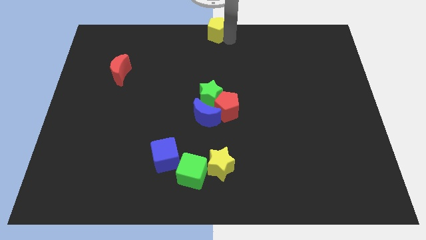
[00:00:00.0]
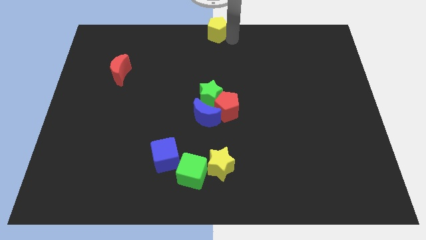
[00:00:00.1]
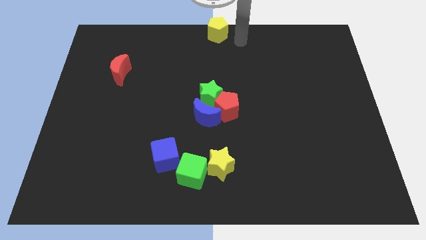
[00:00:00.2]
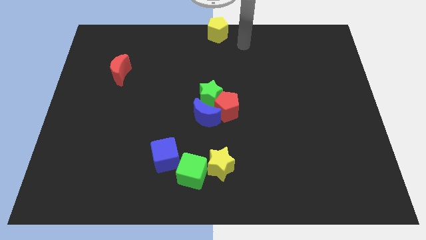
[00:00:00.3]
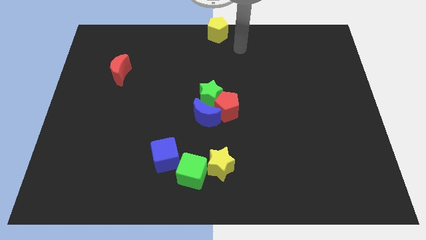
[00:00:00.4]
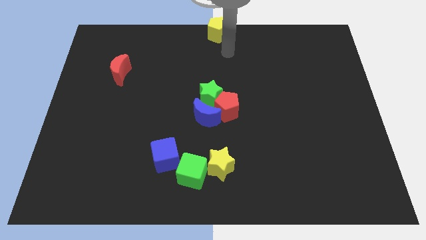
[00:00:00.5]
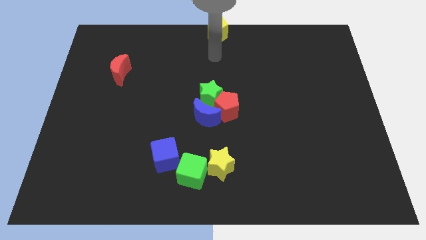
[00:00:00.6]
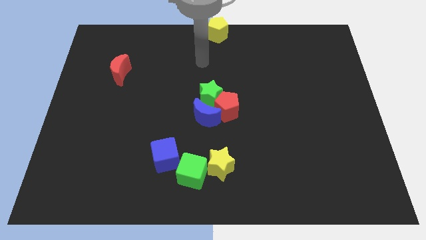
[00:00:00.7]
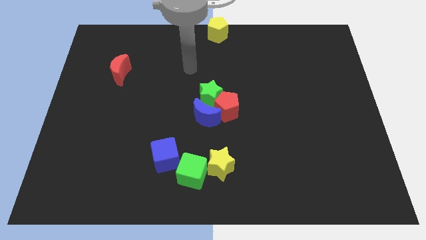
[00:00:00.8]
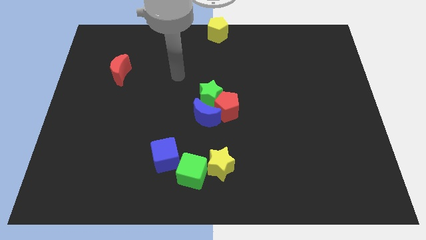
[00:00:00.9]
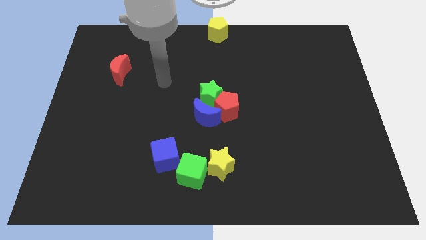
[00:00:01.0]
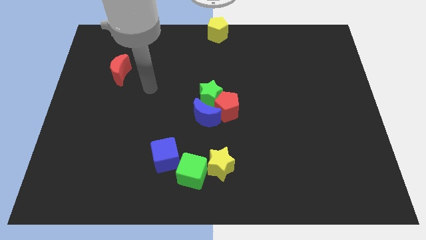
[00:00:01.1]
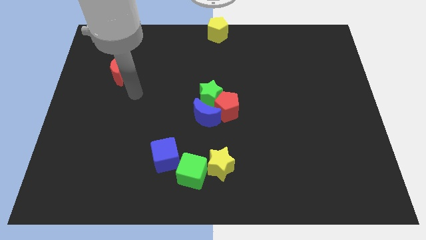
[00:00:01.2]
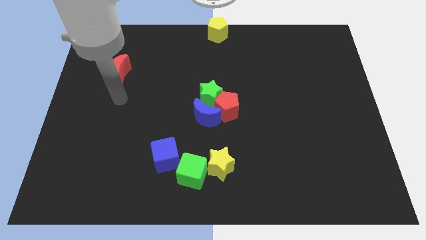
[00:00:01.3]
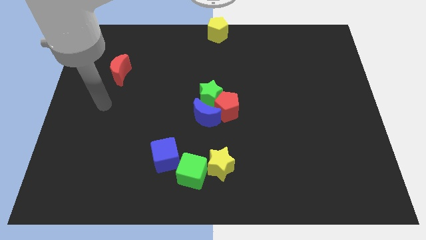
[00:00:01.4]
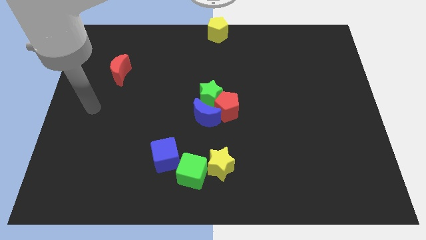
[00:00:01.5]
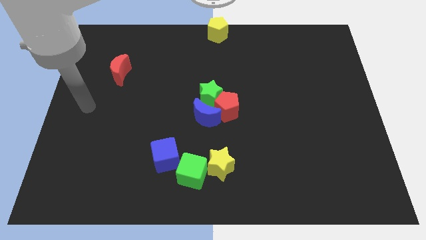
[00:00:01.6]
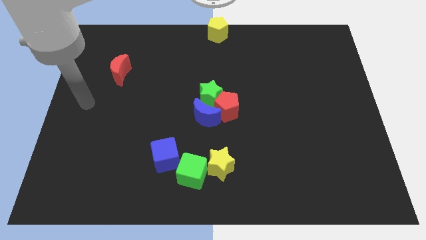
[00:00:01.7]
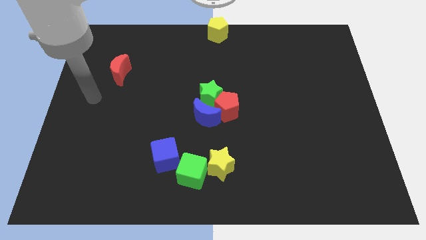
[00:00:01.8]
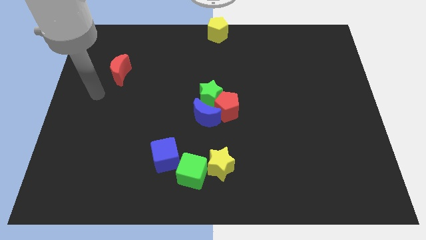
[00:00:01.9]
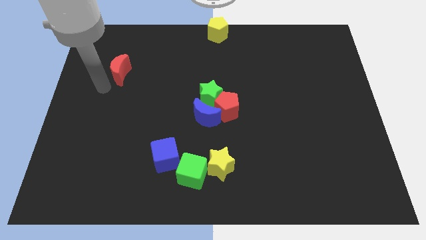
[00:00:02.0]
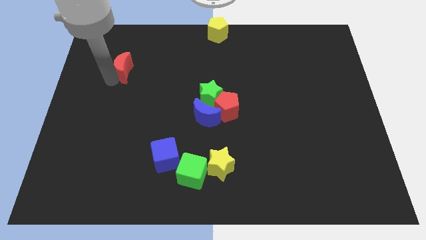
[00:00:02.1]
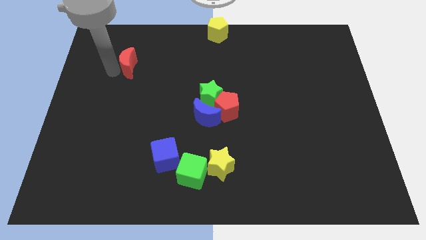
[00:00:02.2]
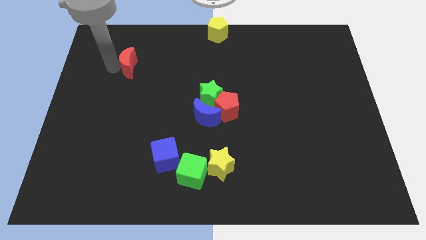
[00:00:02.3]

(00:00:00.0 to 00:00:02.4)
point your arm left to red moon

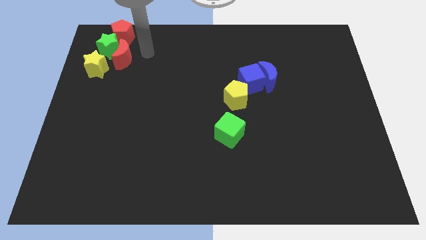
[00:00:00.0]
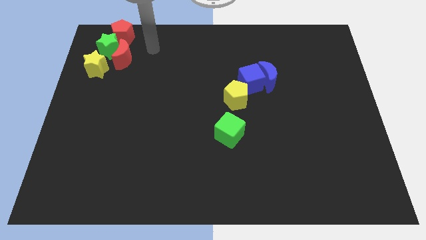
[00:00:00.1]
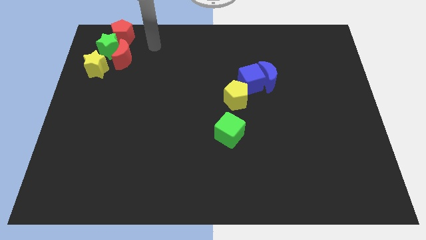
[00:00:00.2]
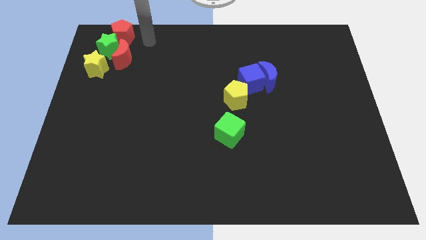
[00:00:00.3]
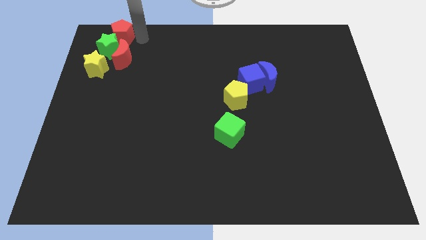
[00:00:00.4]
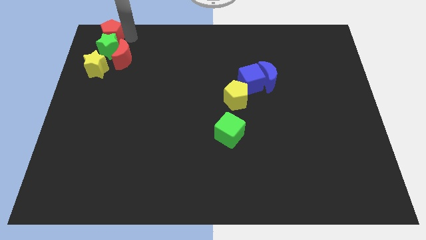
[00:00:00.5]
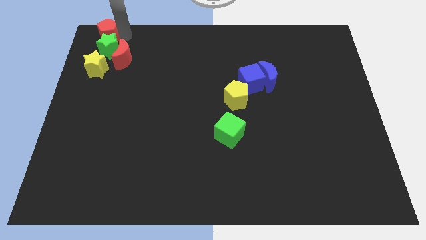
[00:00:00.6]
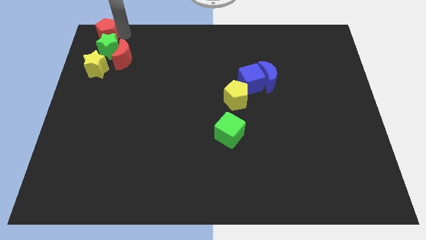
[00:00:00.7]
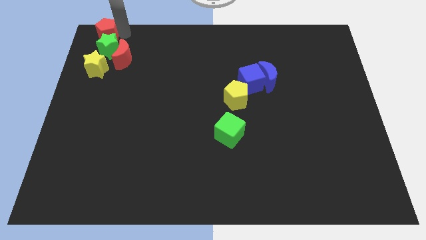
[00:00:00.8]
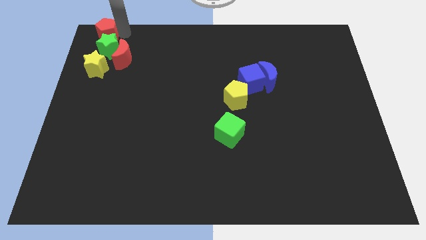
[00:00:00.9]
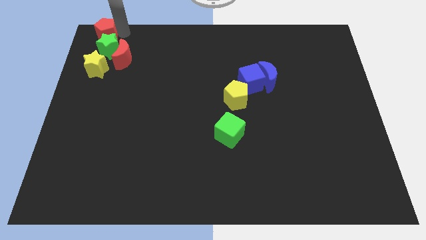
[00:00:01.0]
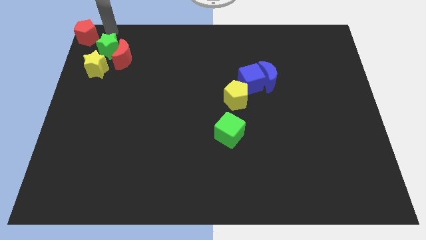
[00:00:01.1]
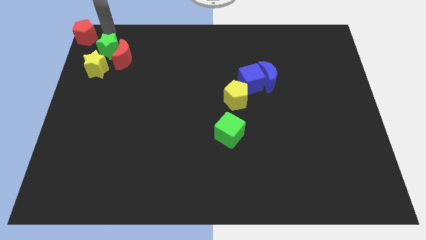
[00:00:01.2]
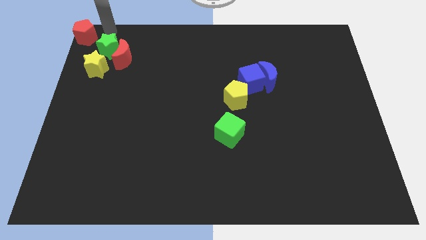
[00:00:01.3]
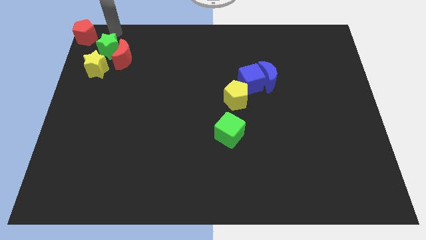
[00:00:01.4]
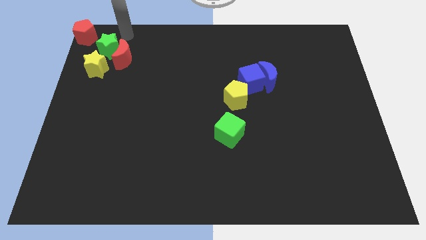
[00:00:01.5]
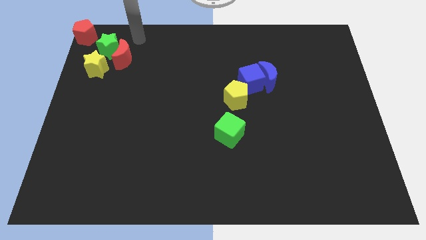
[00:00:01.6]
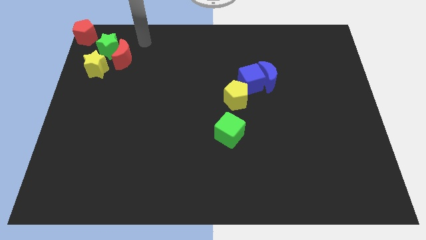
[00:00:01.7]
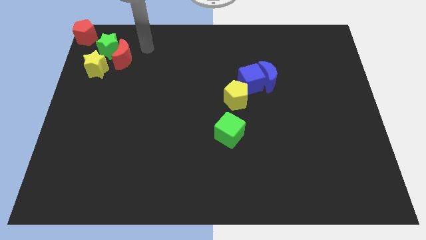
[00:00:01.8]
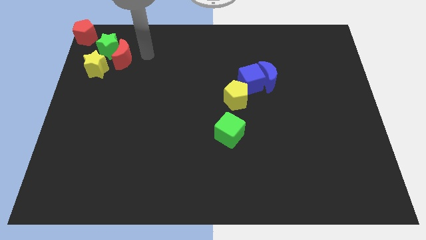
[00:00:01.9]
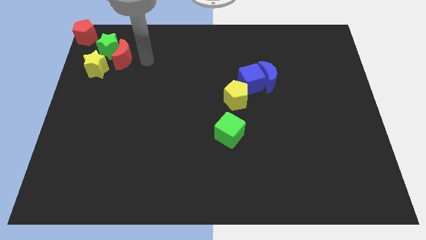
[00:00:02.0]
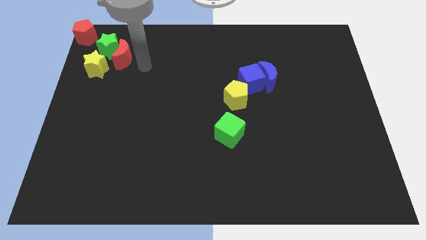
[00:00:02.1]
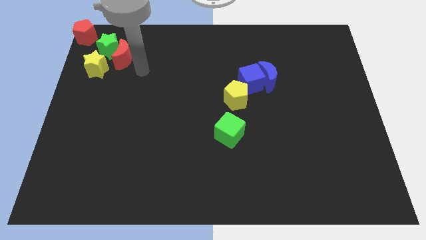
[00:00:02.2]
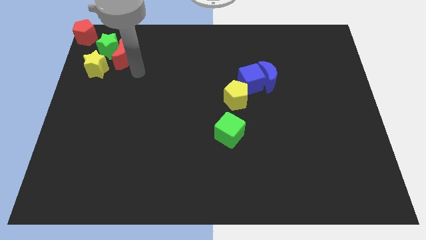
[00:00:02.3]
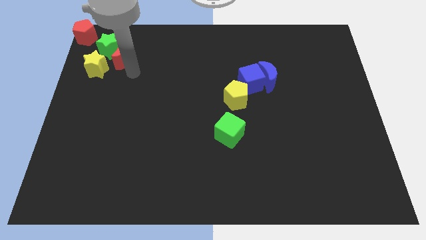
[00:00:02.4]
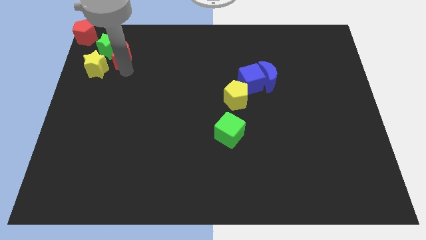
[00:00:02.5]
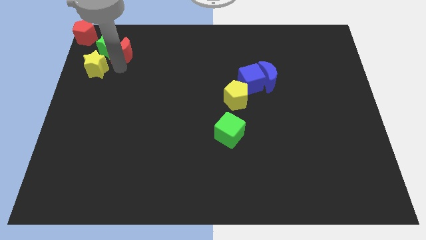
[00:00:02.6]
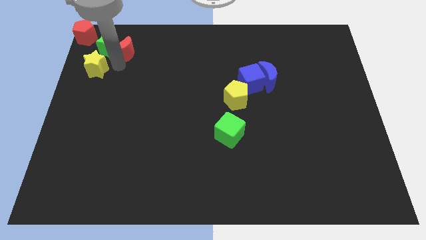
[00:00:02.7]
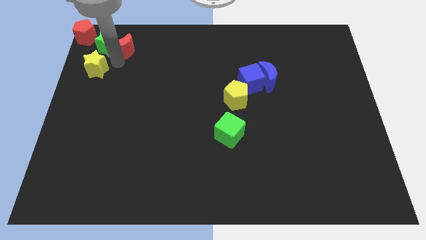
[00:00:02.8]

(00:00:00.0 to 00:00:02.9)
drag red pentagon towards top left corner of the board

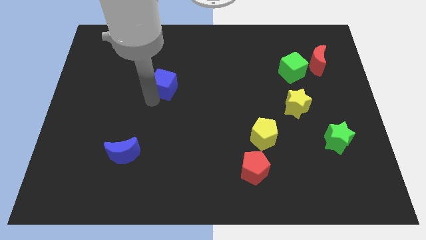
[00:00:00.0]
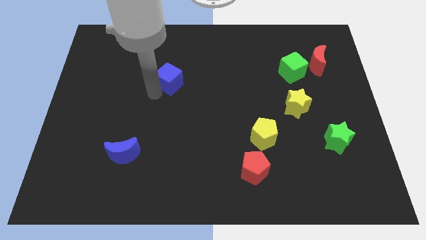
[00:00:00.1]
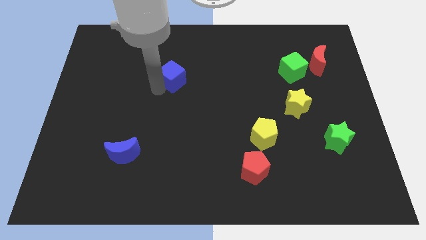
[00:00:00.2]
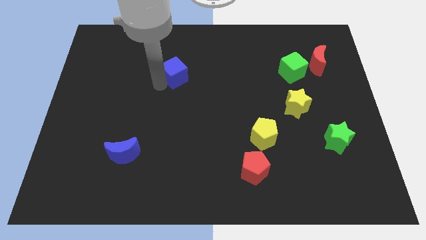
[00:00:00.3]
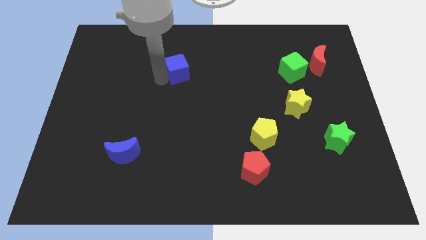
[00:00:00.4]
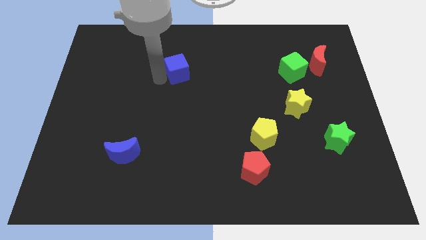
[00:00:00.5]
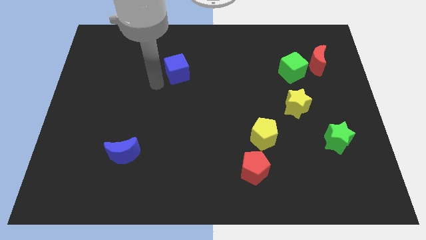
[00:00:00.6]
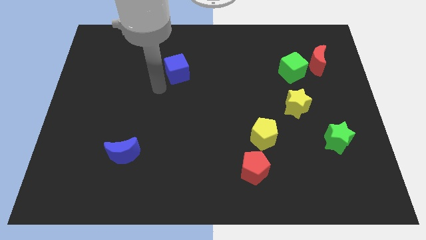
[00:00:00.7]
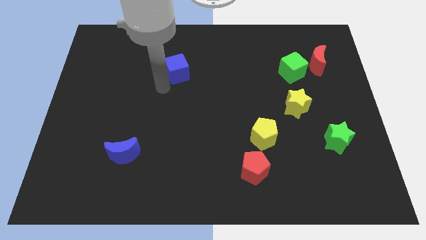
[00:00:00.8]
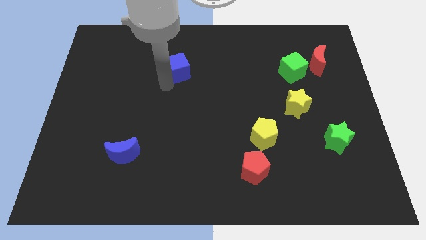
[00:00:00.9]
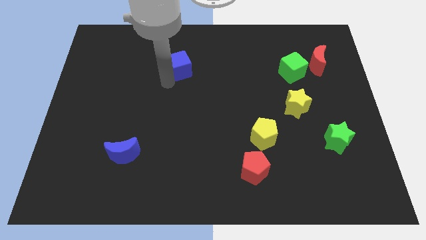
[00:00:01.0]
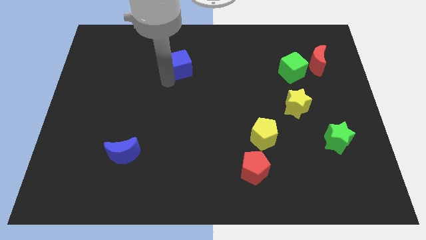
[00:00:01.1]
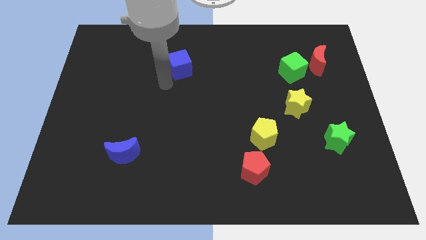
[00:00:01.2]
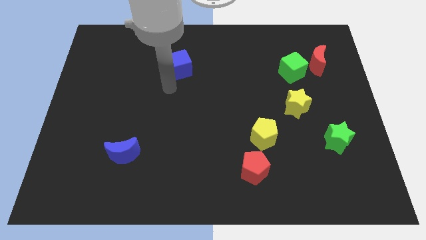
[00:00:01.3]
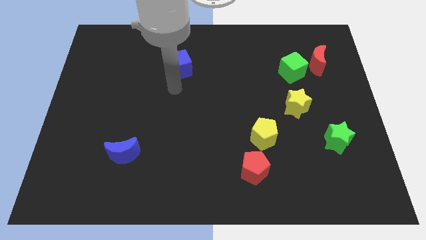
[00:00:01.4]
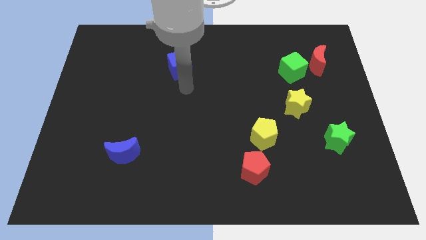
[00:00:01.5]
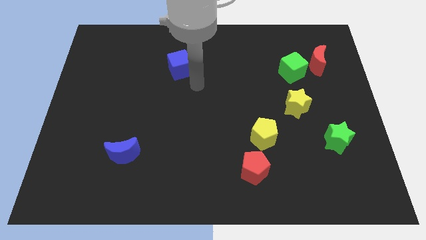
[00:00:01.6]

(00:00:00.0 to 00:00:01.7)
move blue cube towards top side of board

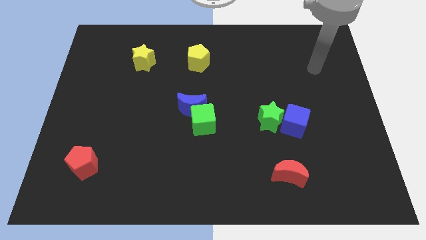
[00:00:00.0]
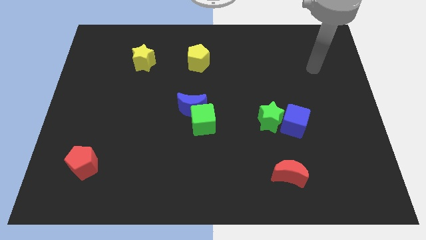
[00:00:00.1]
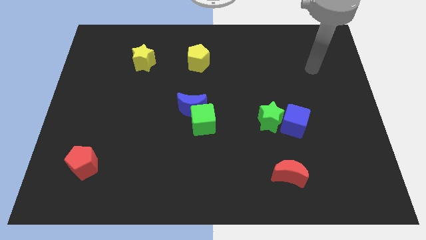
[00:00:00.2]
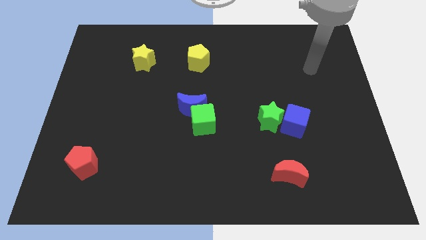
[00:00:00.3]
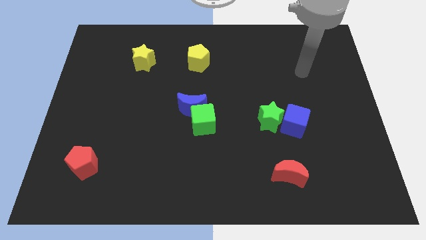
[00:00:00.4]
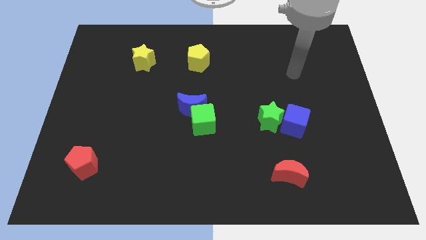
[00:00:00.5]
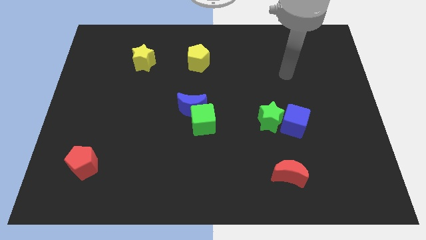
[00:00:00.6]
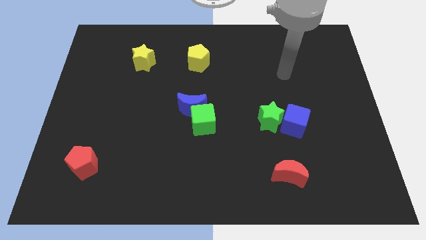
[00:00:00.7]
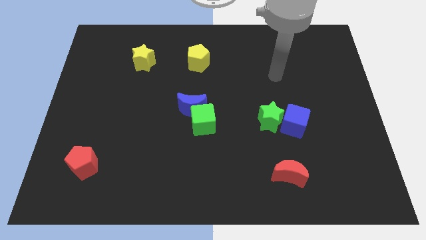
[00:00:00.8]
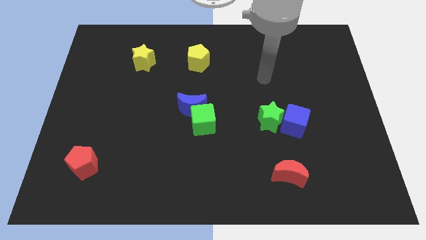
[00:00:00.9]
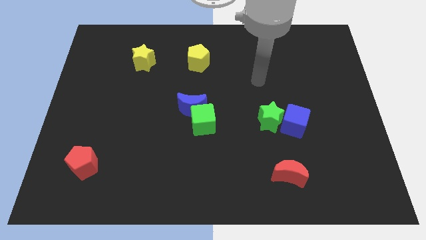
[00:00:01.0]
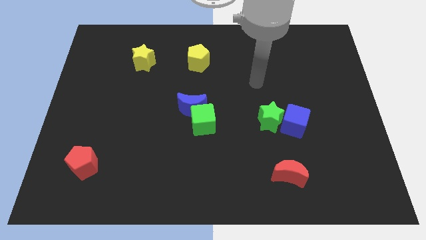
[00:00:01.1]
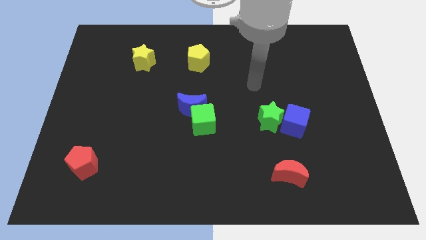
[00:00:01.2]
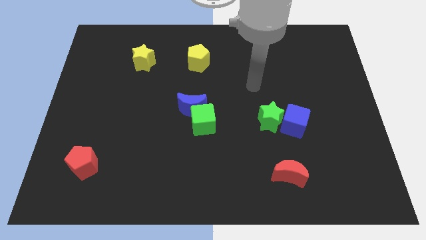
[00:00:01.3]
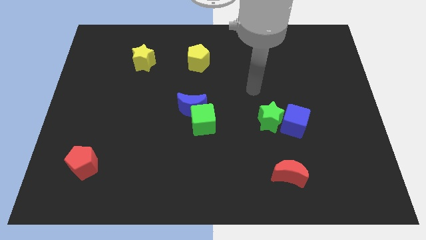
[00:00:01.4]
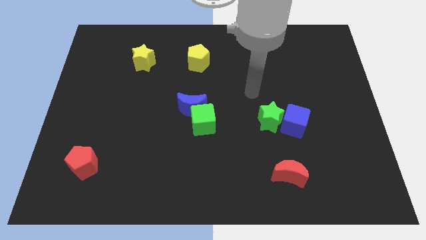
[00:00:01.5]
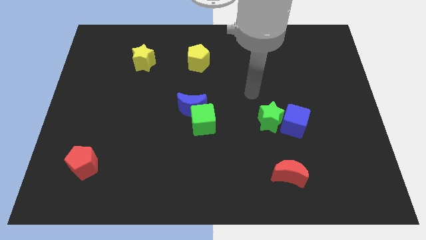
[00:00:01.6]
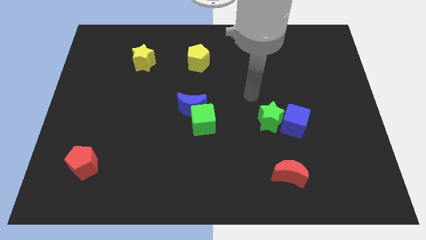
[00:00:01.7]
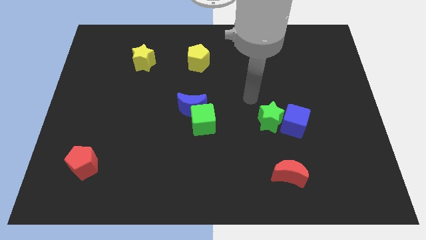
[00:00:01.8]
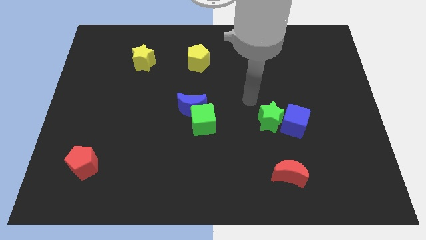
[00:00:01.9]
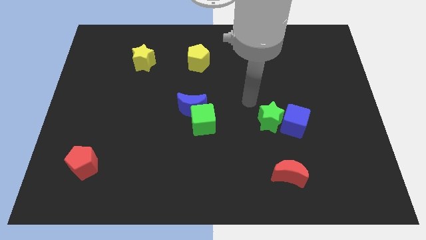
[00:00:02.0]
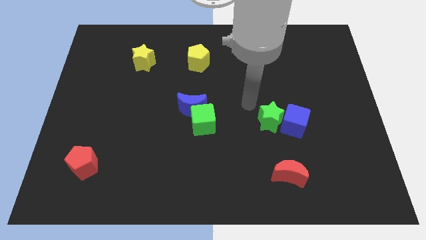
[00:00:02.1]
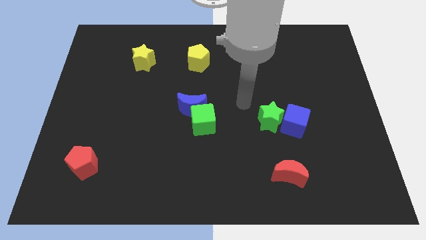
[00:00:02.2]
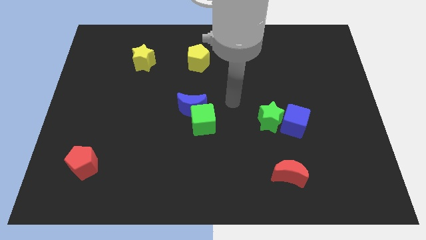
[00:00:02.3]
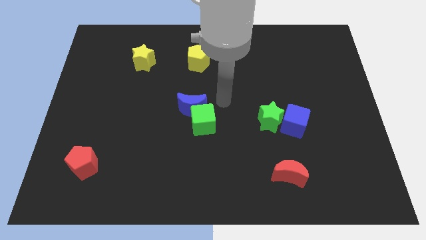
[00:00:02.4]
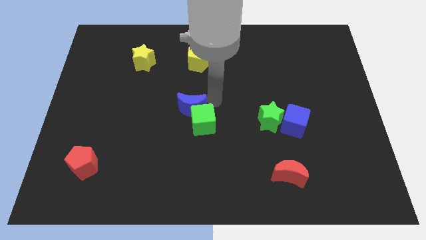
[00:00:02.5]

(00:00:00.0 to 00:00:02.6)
place the arm to the left of the blue moon
